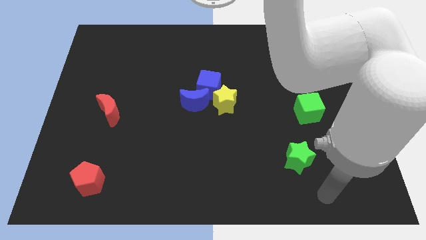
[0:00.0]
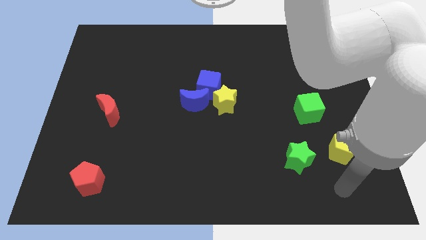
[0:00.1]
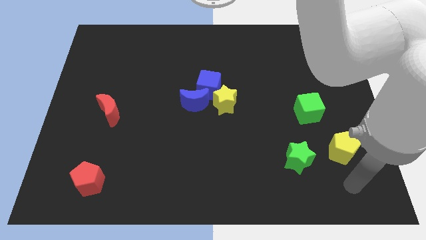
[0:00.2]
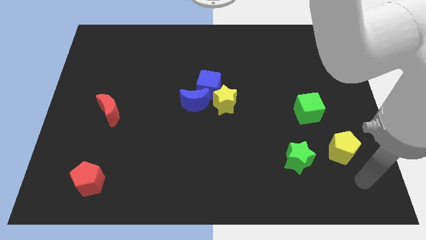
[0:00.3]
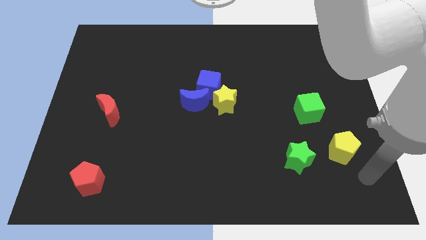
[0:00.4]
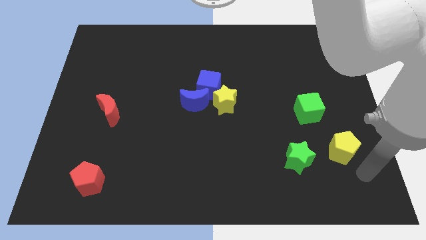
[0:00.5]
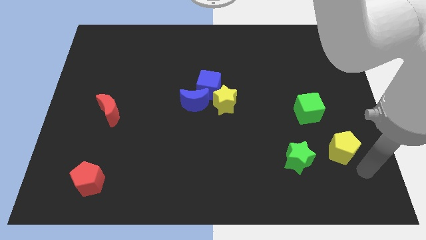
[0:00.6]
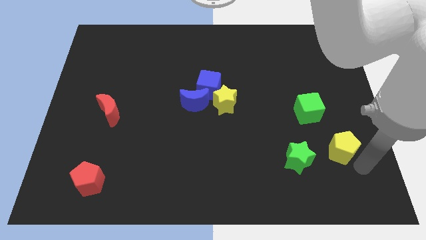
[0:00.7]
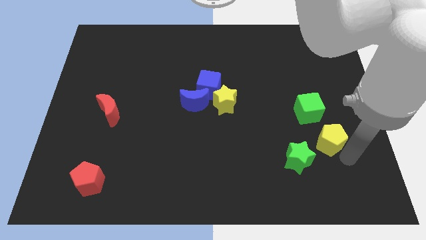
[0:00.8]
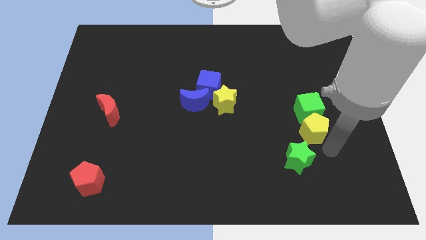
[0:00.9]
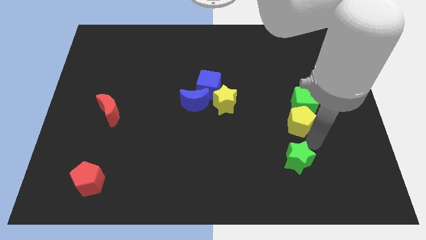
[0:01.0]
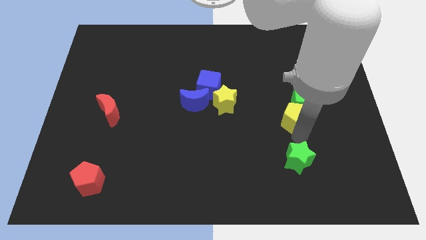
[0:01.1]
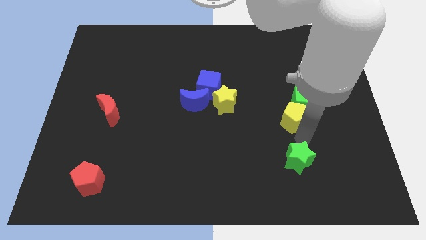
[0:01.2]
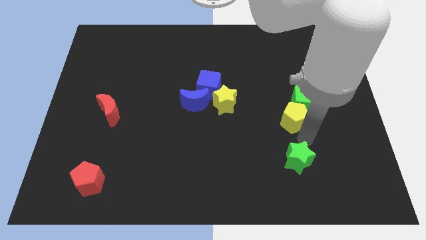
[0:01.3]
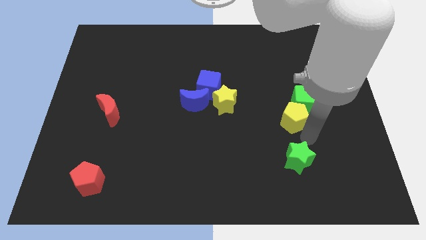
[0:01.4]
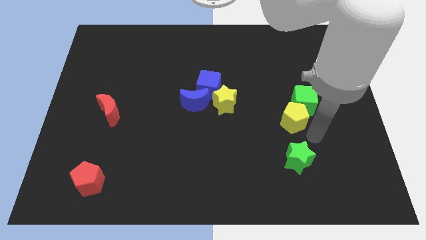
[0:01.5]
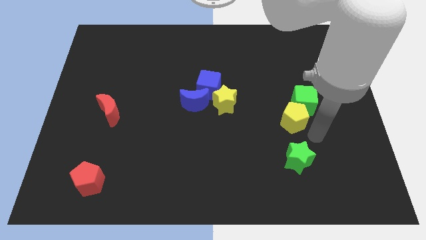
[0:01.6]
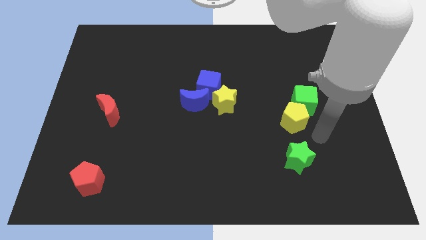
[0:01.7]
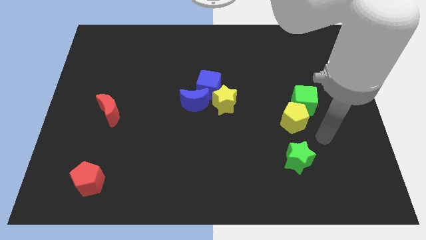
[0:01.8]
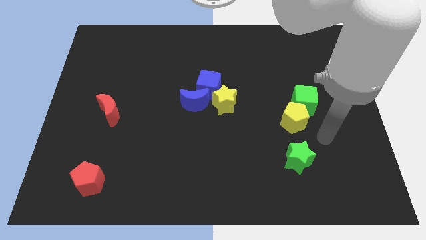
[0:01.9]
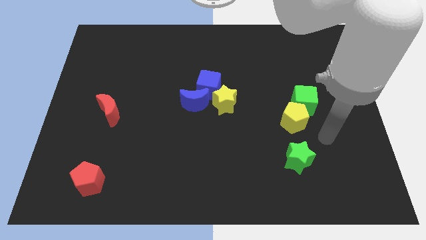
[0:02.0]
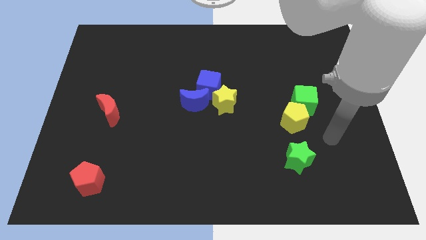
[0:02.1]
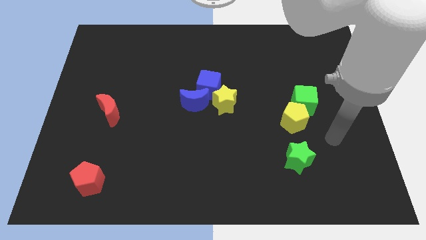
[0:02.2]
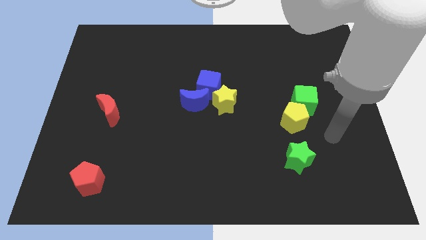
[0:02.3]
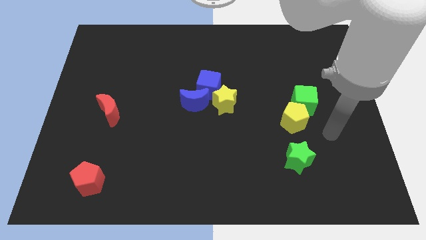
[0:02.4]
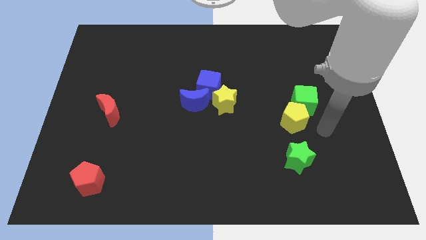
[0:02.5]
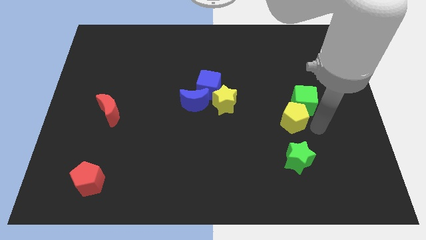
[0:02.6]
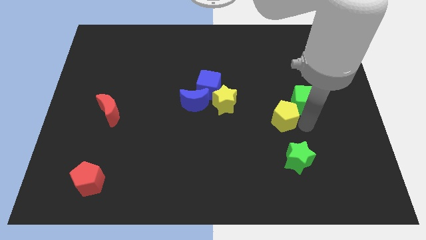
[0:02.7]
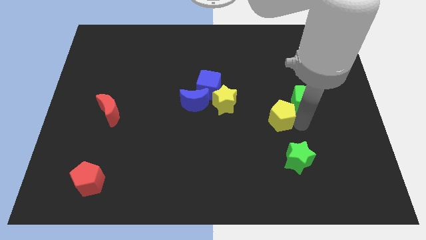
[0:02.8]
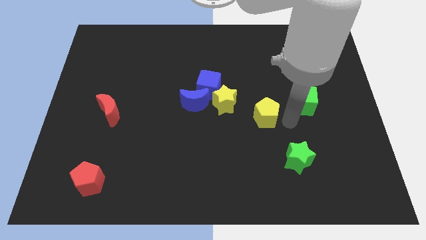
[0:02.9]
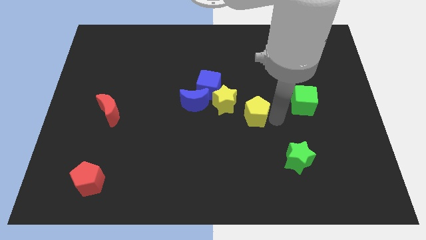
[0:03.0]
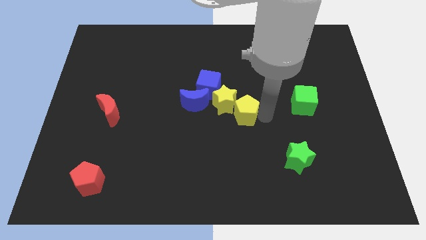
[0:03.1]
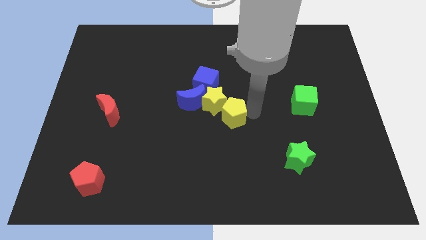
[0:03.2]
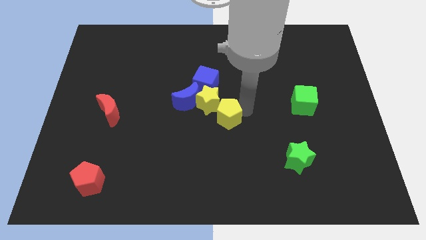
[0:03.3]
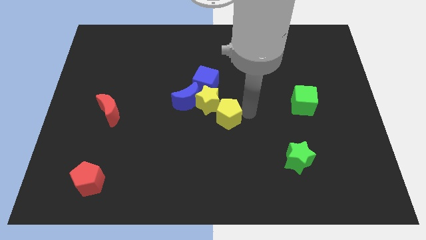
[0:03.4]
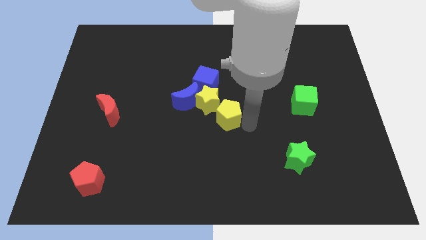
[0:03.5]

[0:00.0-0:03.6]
push the yellow pentagon to the right of the yellow star

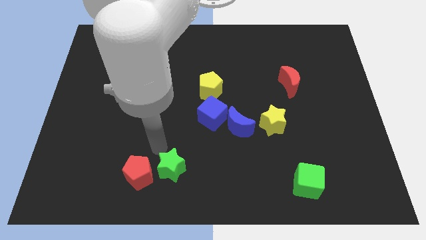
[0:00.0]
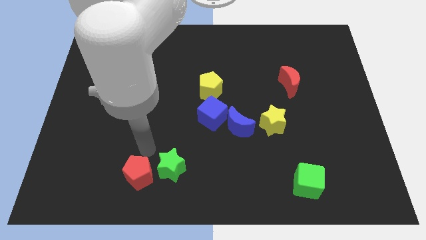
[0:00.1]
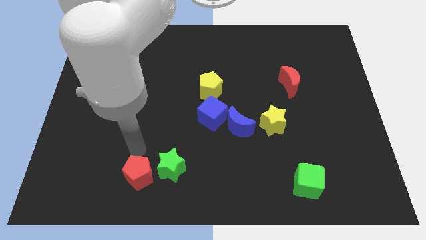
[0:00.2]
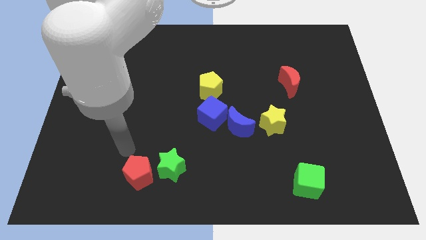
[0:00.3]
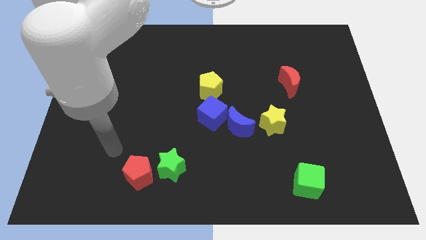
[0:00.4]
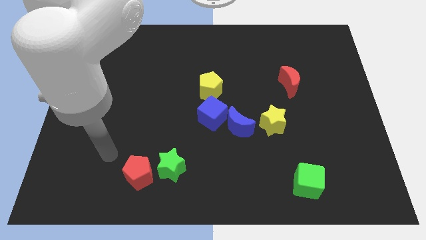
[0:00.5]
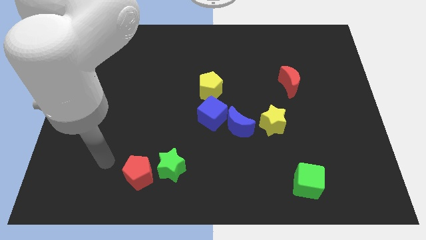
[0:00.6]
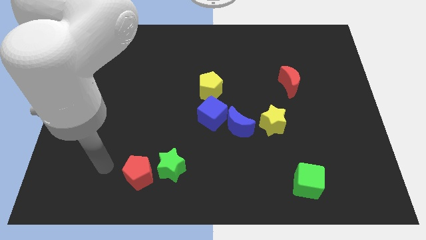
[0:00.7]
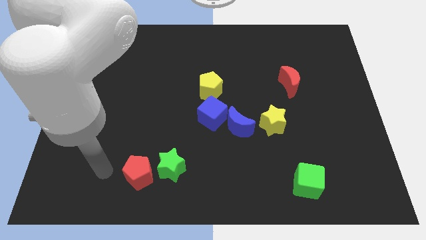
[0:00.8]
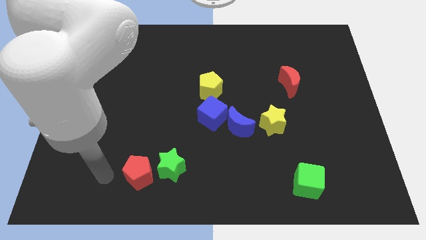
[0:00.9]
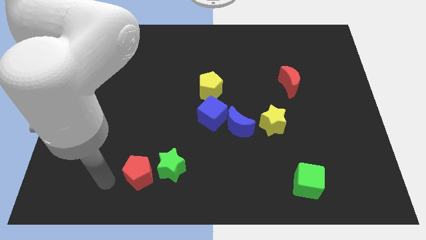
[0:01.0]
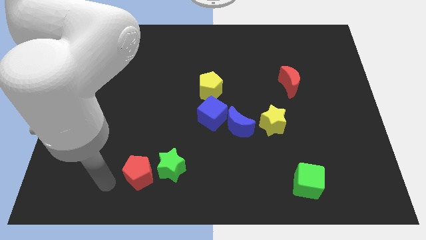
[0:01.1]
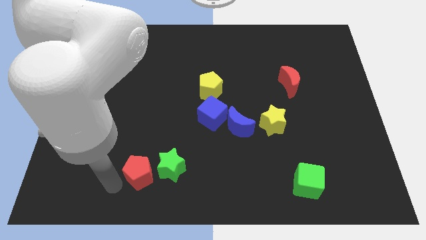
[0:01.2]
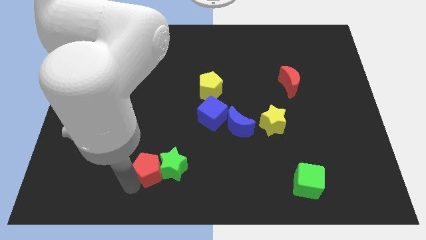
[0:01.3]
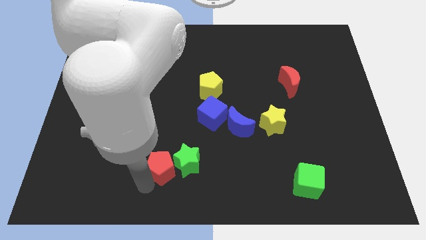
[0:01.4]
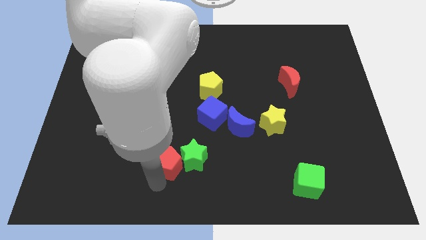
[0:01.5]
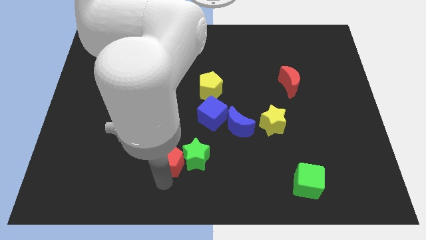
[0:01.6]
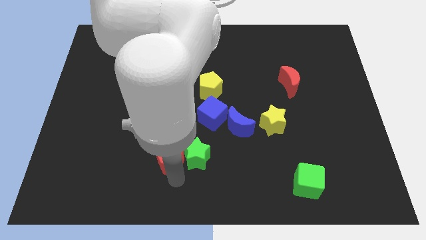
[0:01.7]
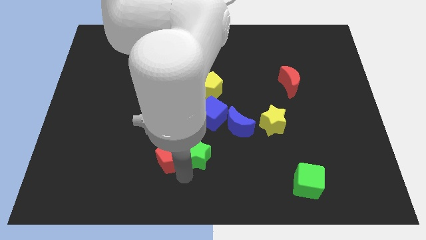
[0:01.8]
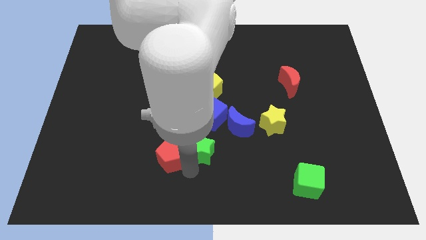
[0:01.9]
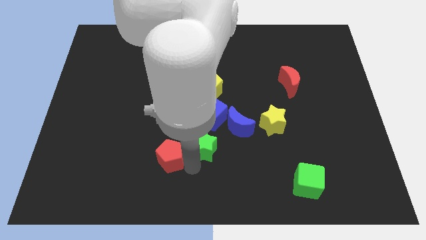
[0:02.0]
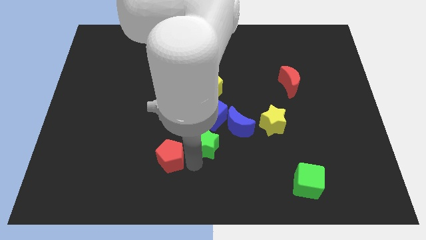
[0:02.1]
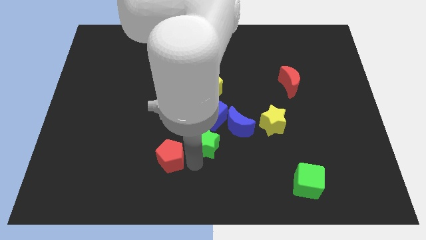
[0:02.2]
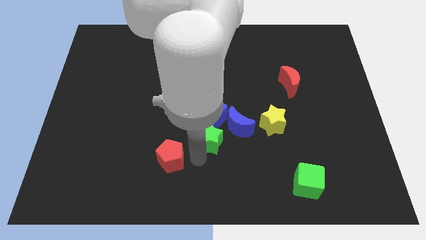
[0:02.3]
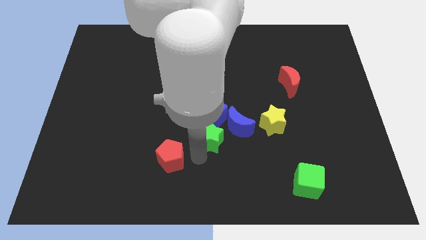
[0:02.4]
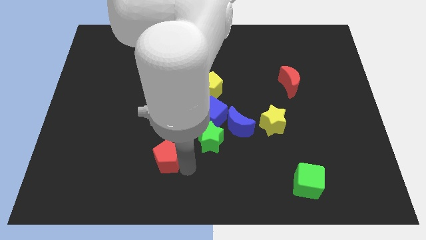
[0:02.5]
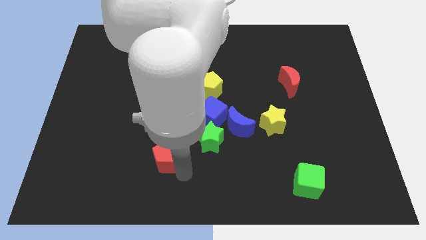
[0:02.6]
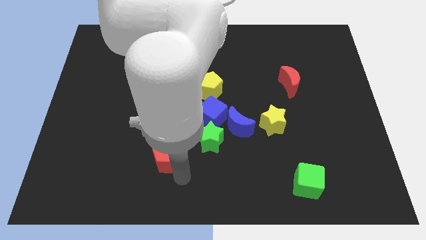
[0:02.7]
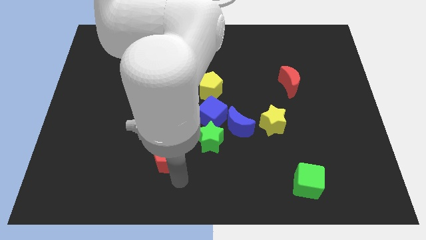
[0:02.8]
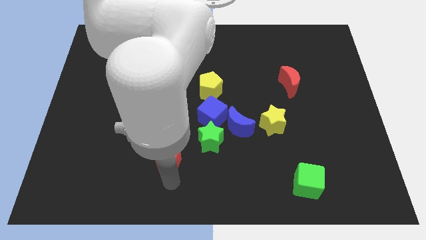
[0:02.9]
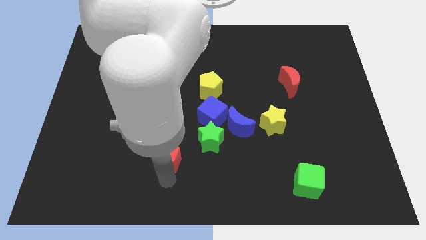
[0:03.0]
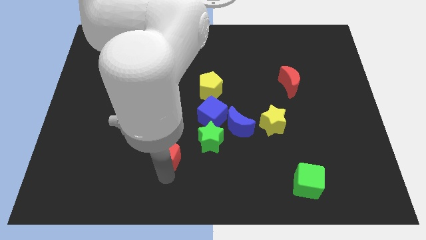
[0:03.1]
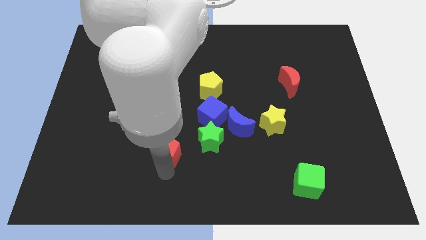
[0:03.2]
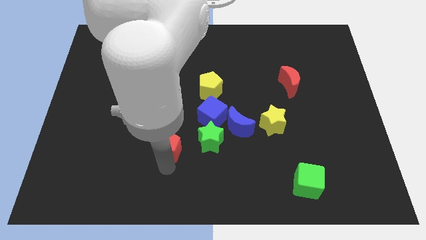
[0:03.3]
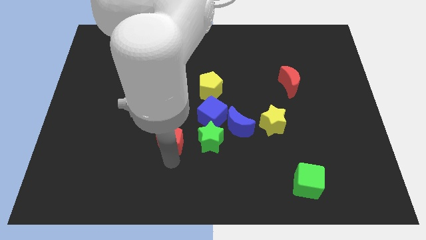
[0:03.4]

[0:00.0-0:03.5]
place red pentagon beside green star

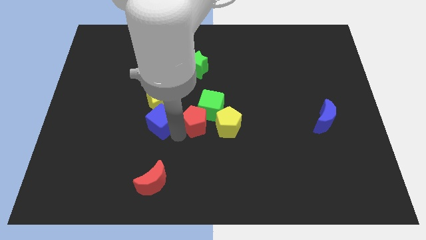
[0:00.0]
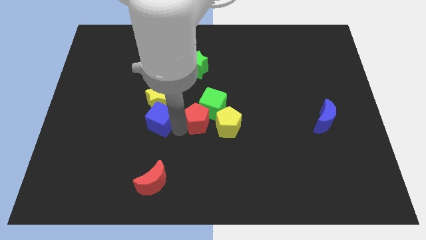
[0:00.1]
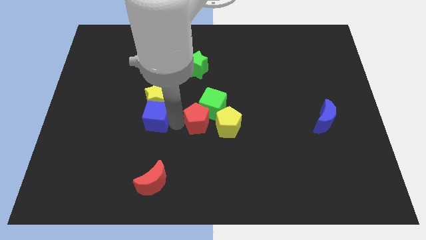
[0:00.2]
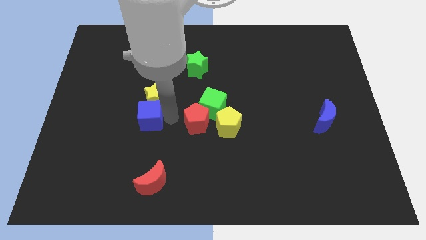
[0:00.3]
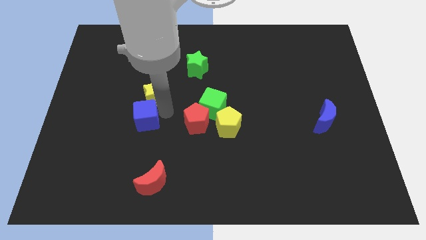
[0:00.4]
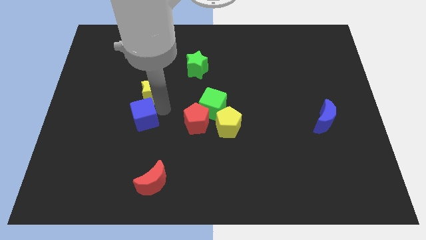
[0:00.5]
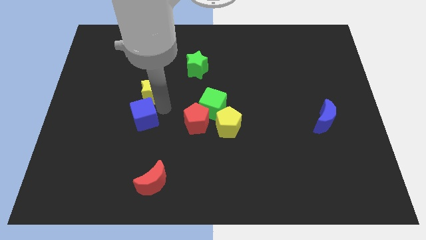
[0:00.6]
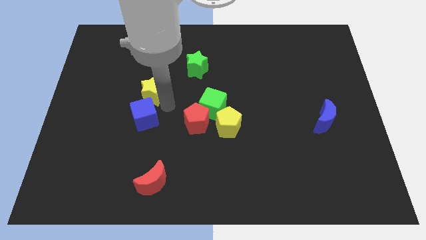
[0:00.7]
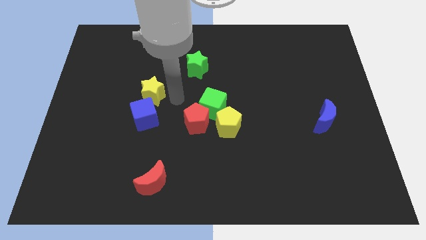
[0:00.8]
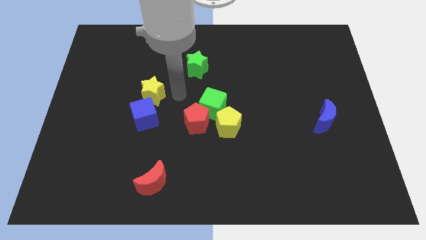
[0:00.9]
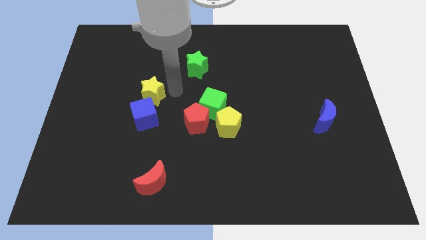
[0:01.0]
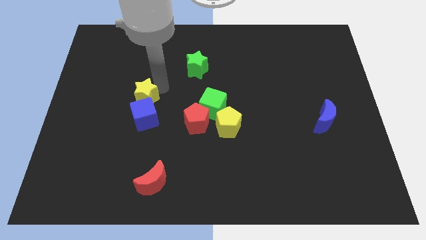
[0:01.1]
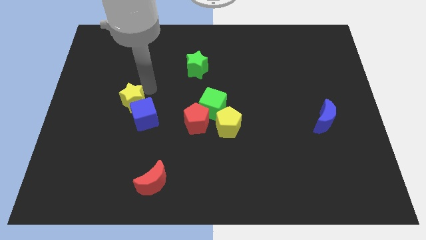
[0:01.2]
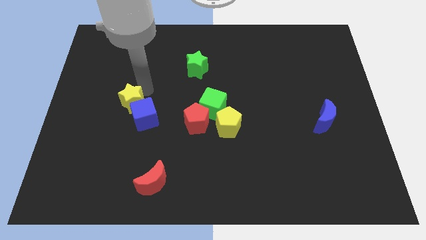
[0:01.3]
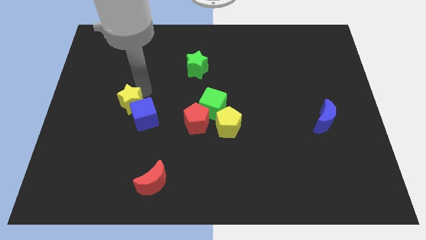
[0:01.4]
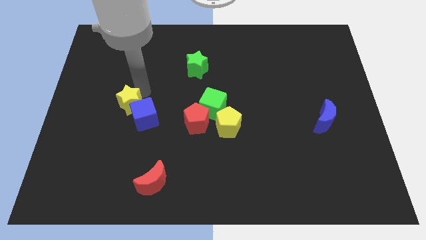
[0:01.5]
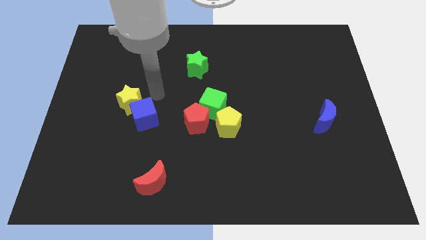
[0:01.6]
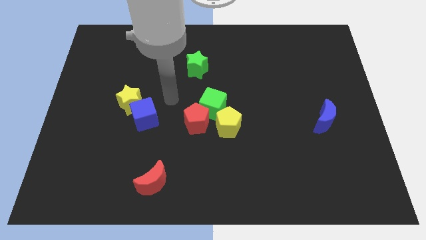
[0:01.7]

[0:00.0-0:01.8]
move yellow star slightly towards left
